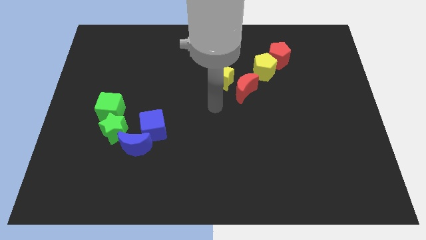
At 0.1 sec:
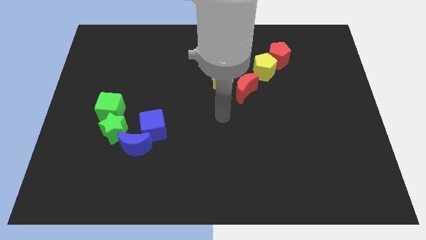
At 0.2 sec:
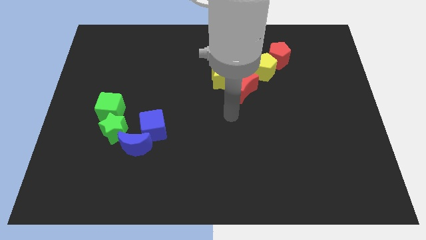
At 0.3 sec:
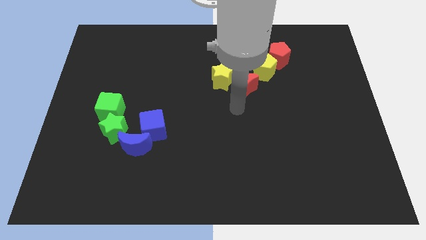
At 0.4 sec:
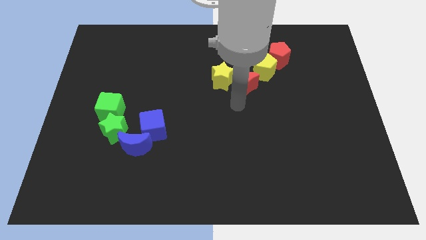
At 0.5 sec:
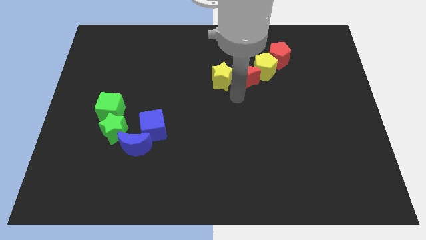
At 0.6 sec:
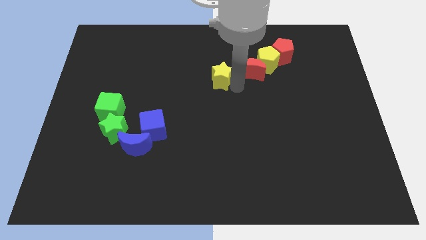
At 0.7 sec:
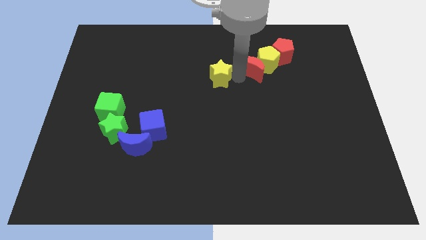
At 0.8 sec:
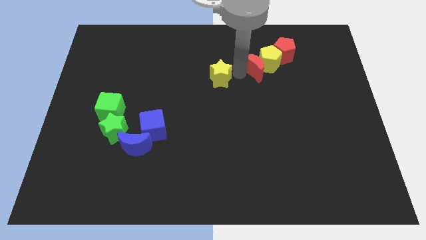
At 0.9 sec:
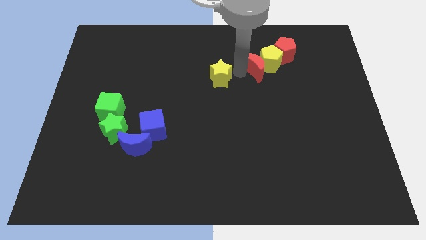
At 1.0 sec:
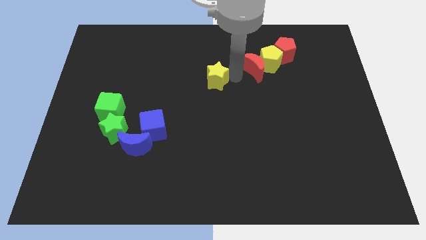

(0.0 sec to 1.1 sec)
push the red crescent slightly upwards

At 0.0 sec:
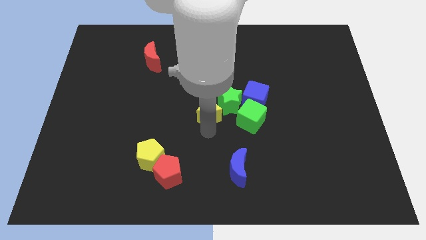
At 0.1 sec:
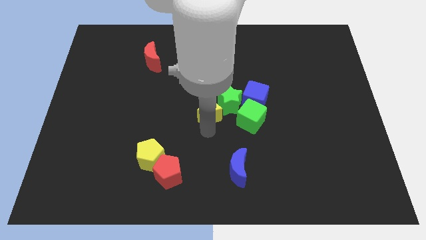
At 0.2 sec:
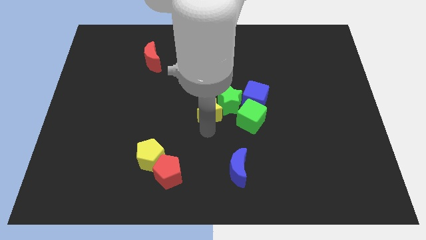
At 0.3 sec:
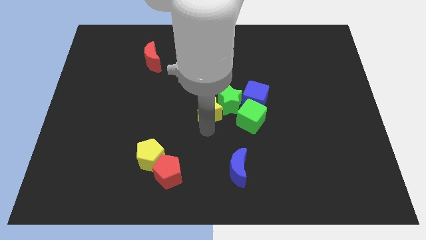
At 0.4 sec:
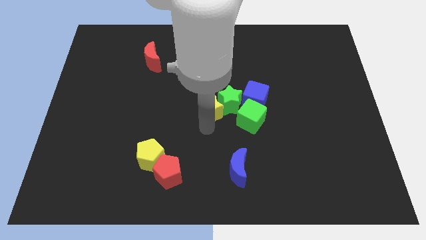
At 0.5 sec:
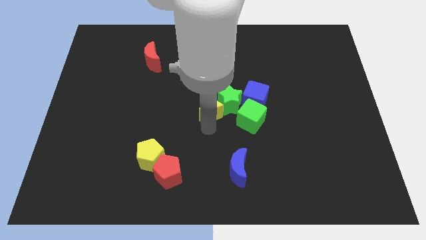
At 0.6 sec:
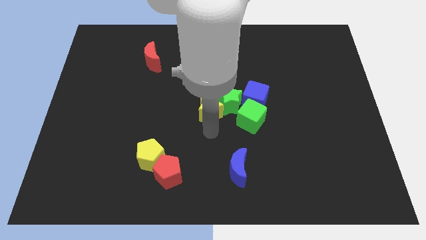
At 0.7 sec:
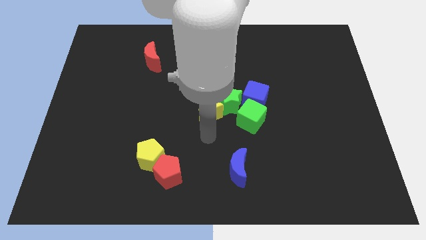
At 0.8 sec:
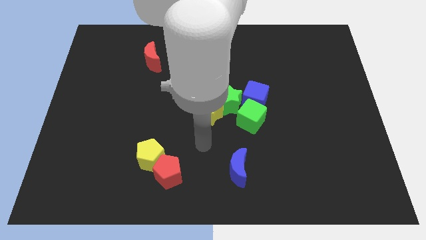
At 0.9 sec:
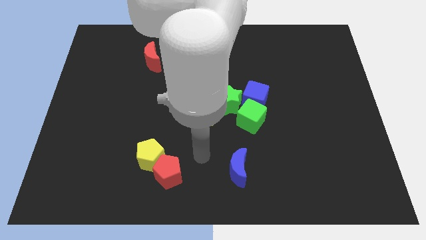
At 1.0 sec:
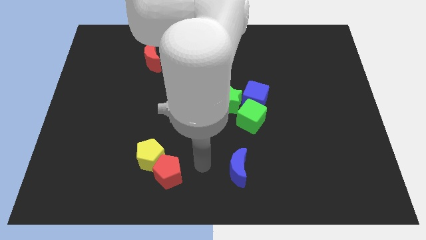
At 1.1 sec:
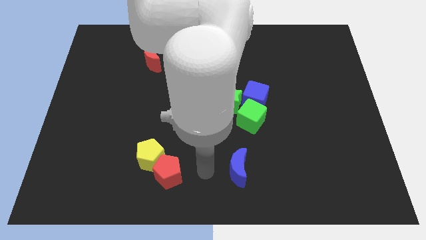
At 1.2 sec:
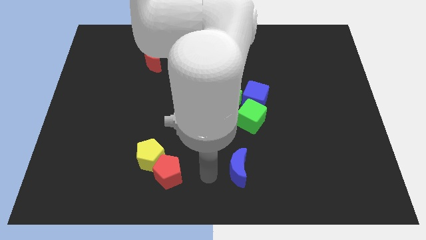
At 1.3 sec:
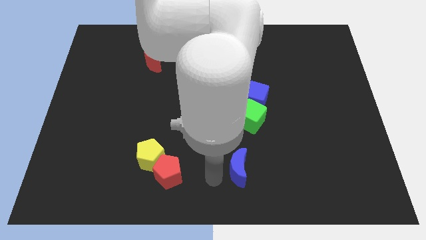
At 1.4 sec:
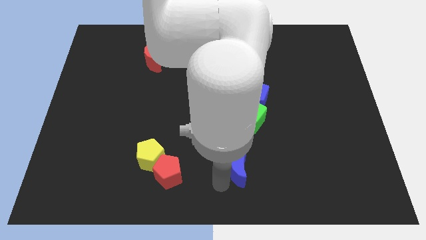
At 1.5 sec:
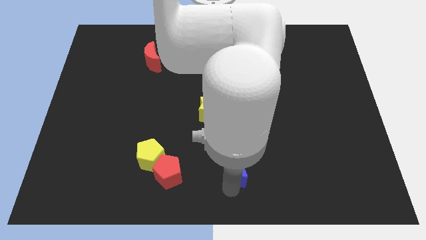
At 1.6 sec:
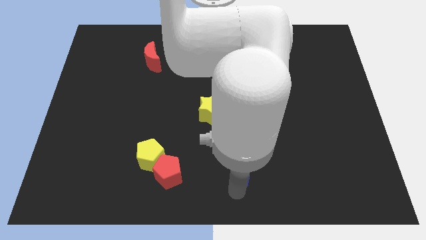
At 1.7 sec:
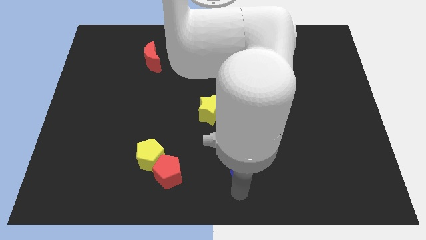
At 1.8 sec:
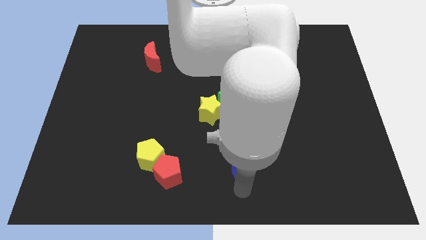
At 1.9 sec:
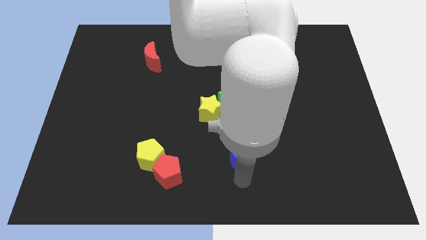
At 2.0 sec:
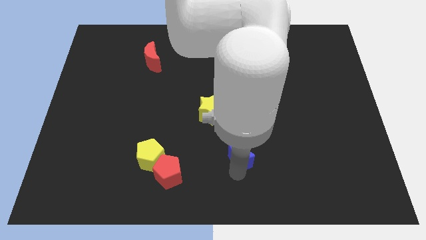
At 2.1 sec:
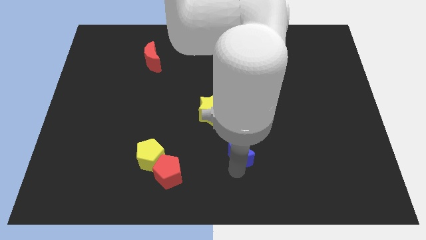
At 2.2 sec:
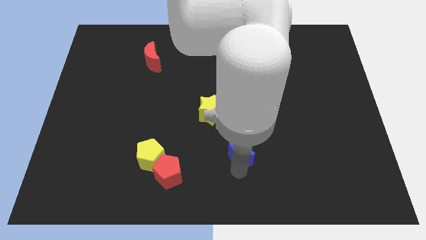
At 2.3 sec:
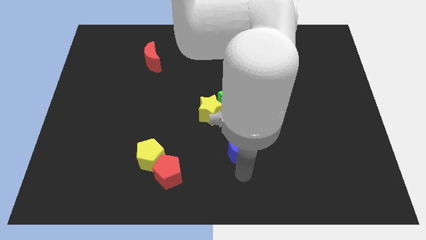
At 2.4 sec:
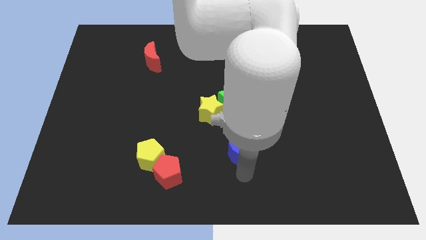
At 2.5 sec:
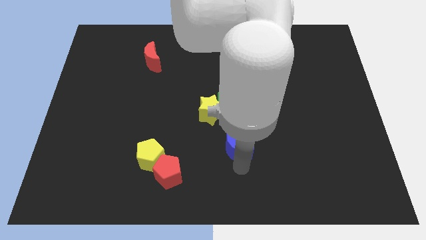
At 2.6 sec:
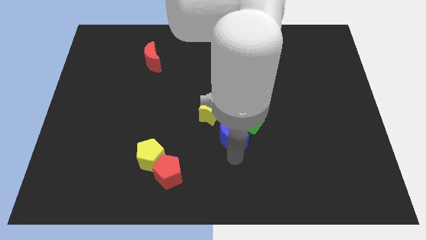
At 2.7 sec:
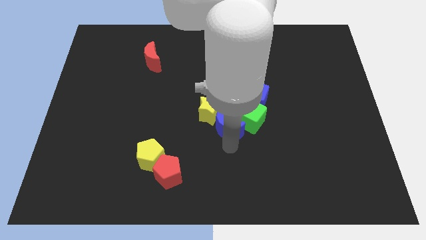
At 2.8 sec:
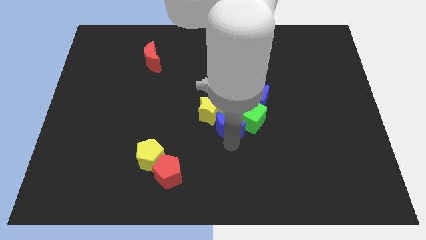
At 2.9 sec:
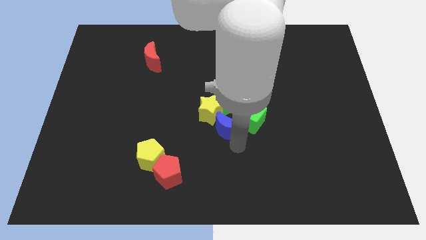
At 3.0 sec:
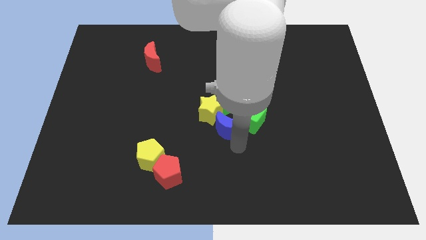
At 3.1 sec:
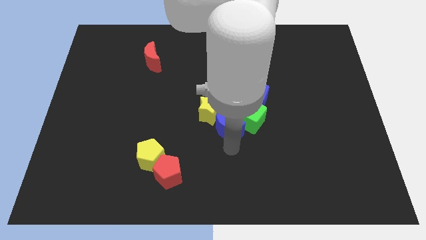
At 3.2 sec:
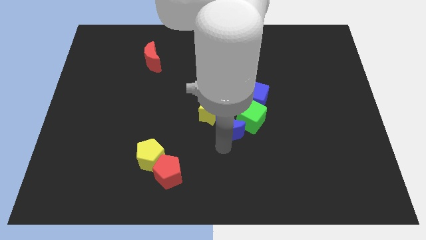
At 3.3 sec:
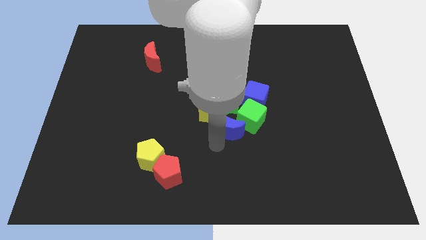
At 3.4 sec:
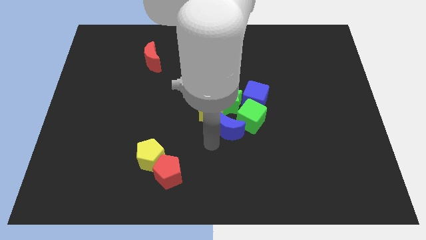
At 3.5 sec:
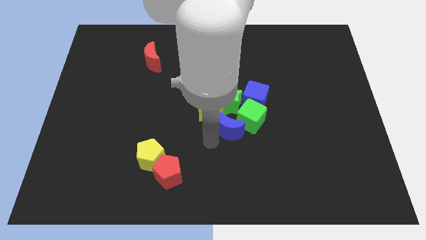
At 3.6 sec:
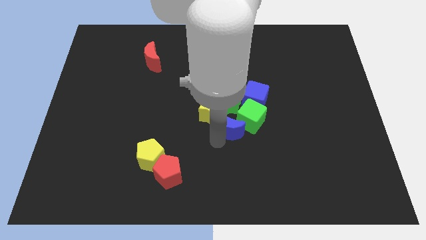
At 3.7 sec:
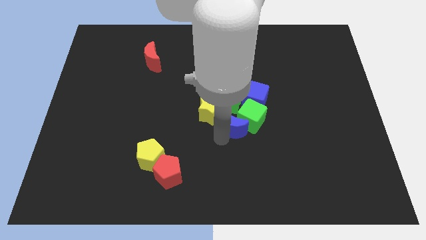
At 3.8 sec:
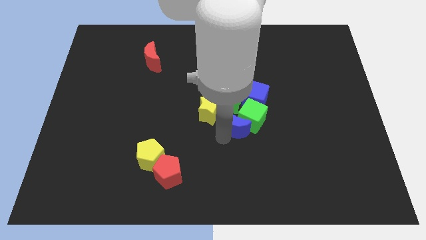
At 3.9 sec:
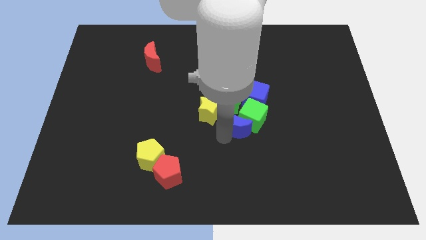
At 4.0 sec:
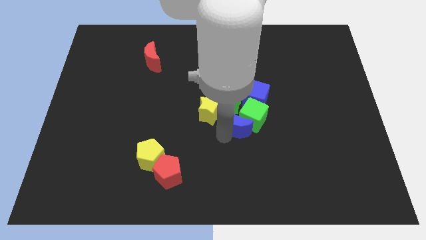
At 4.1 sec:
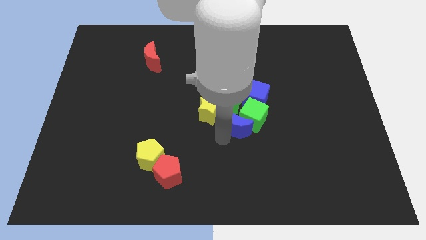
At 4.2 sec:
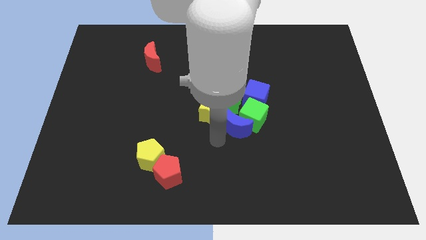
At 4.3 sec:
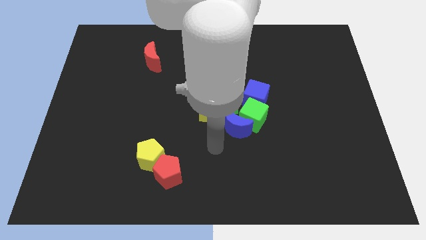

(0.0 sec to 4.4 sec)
place the blue crescent at bottom left of the green cube

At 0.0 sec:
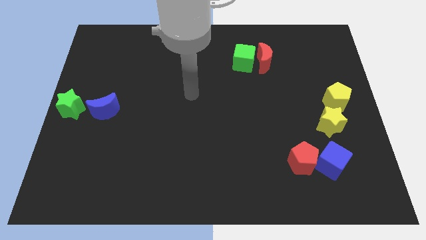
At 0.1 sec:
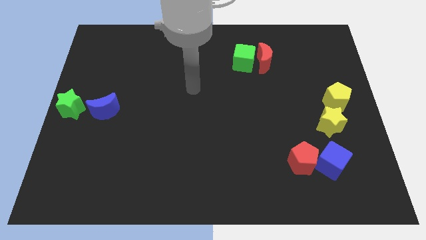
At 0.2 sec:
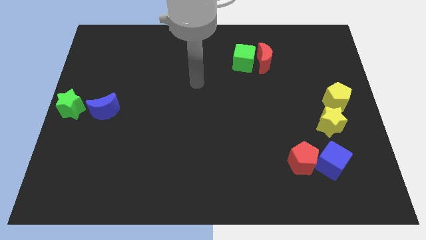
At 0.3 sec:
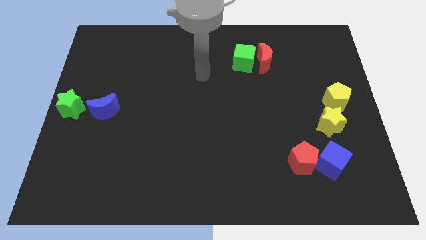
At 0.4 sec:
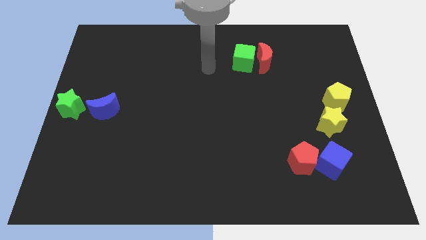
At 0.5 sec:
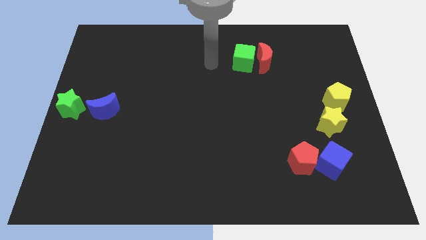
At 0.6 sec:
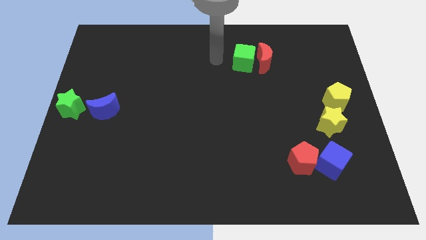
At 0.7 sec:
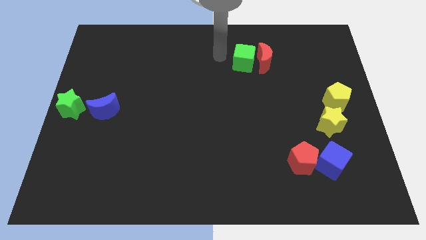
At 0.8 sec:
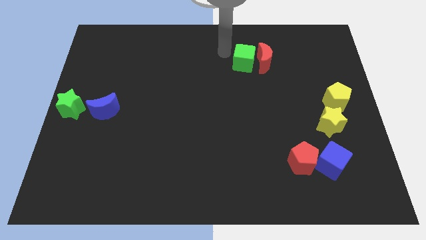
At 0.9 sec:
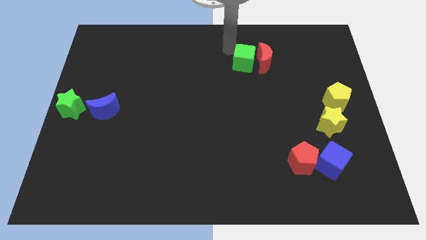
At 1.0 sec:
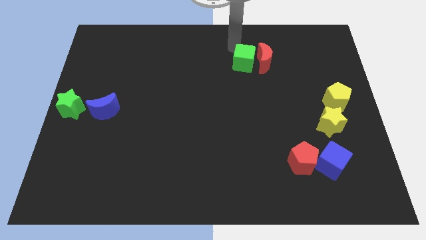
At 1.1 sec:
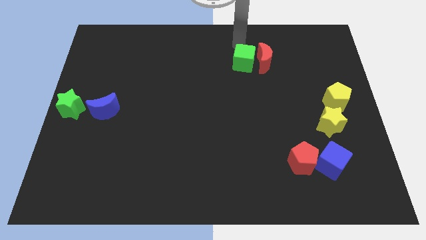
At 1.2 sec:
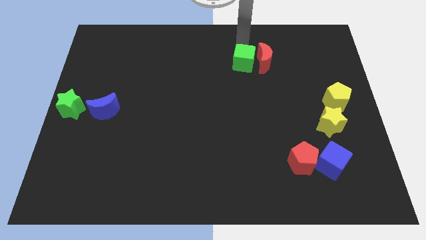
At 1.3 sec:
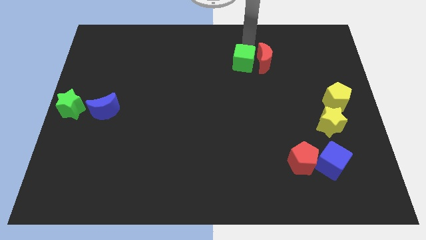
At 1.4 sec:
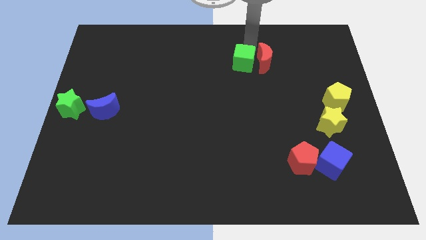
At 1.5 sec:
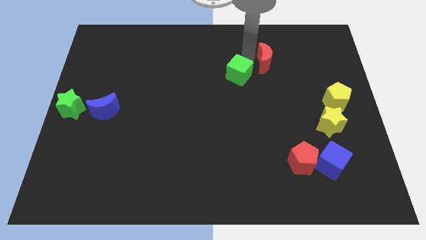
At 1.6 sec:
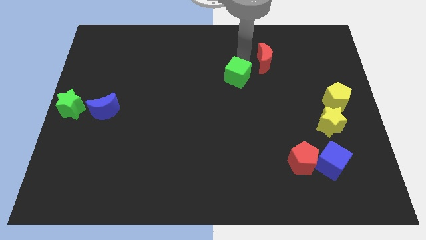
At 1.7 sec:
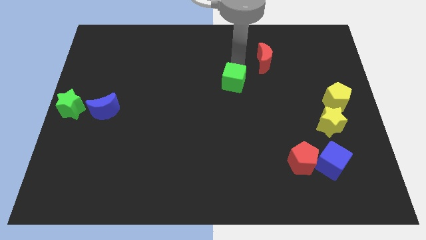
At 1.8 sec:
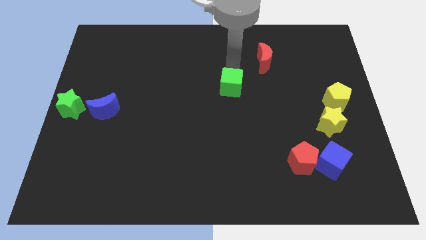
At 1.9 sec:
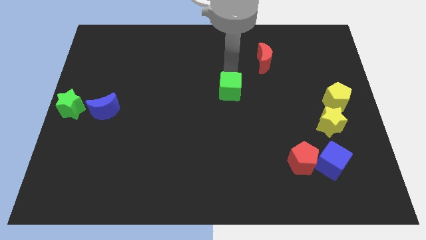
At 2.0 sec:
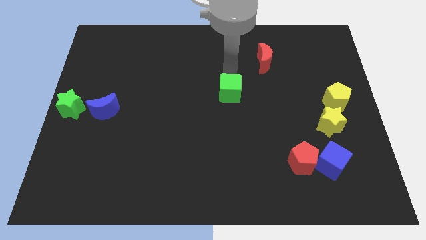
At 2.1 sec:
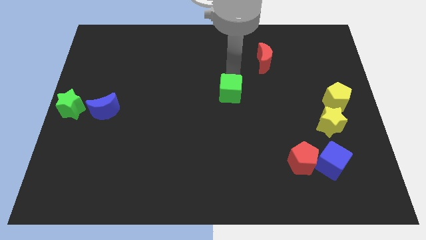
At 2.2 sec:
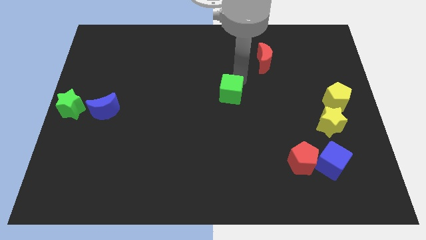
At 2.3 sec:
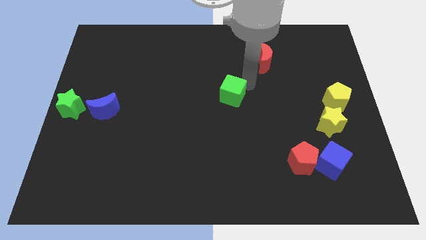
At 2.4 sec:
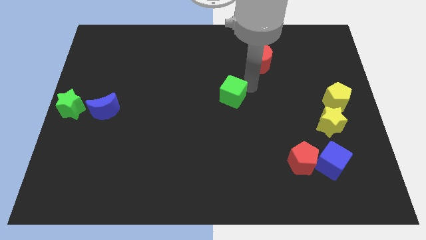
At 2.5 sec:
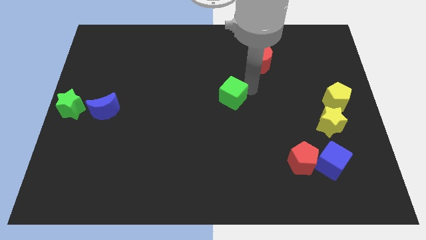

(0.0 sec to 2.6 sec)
move the green cube diagonal to the red moon

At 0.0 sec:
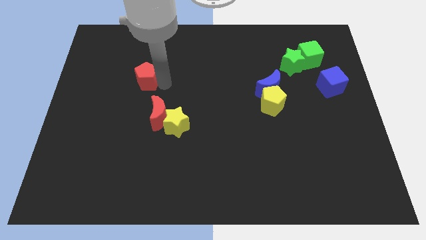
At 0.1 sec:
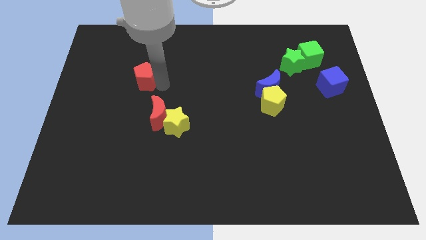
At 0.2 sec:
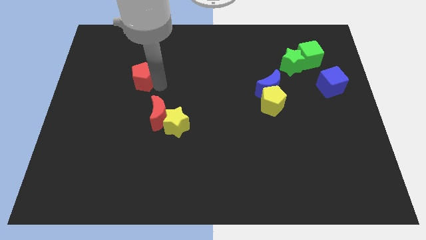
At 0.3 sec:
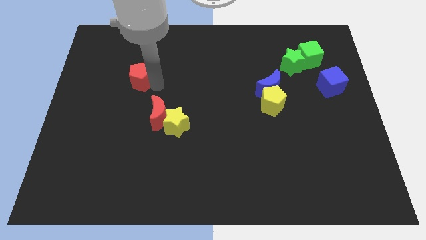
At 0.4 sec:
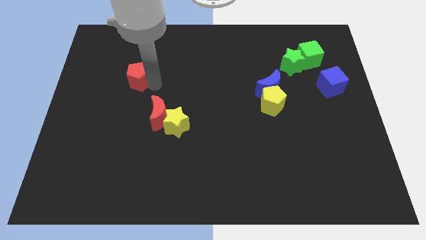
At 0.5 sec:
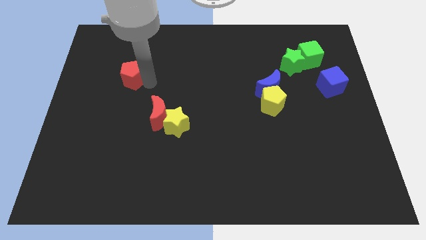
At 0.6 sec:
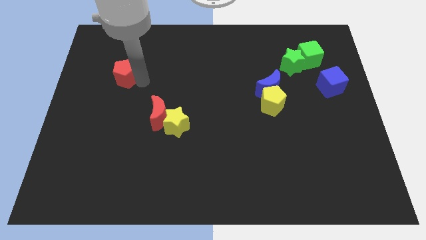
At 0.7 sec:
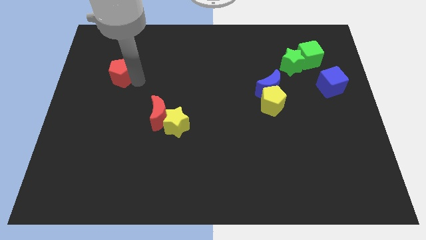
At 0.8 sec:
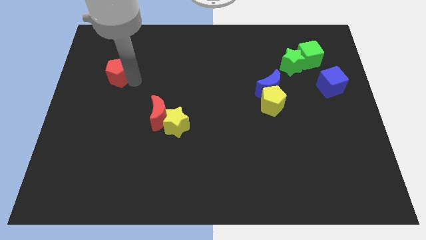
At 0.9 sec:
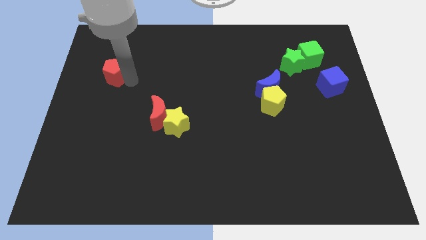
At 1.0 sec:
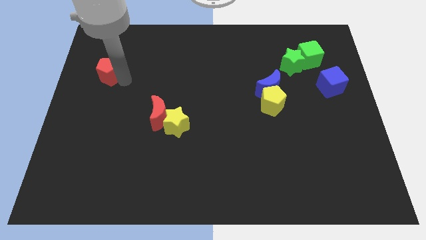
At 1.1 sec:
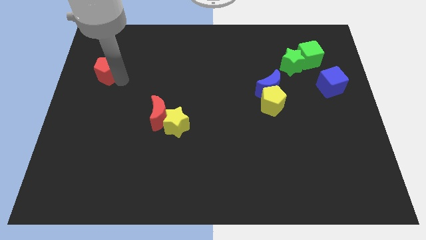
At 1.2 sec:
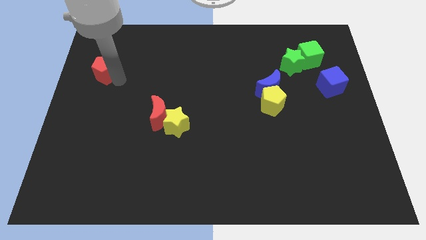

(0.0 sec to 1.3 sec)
move the red pentagon diagonal to the red moon
